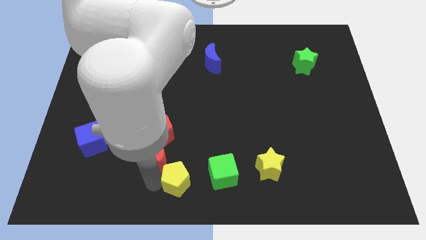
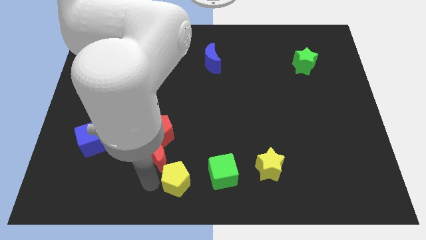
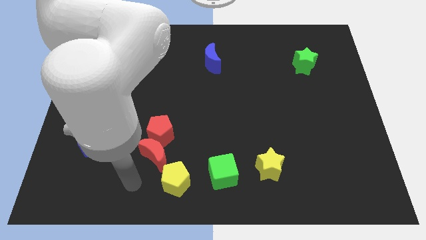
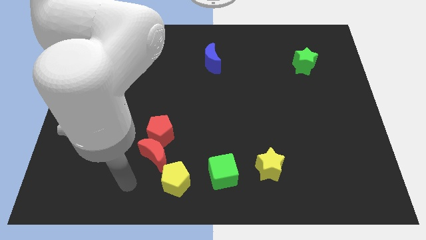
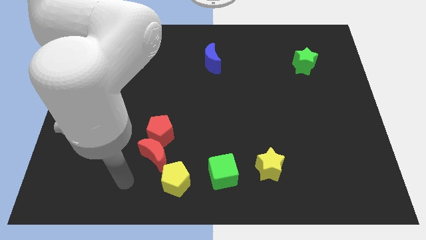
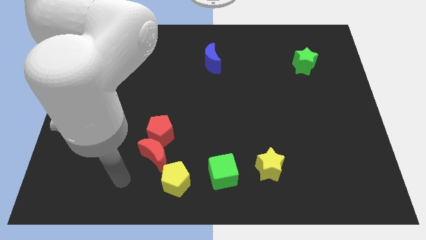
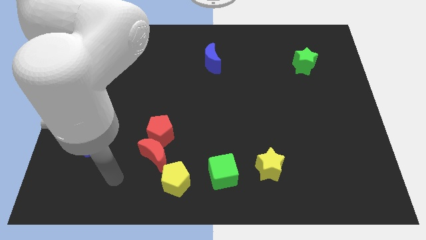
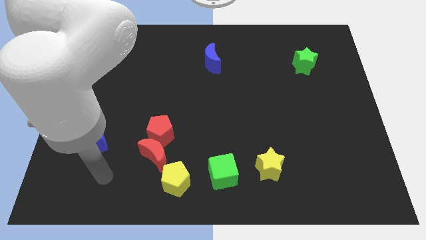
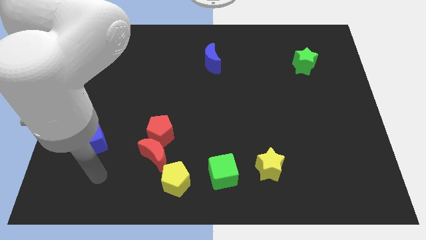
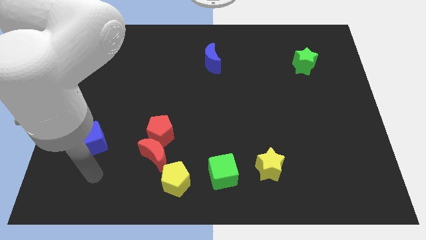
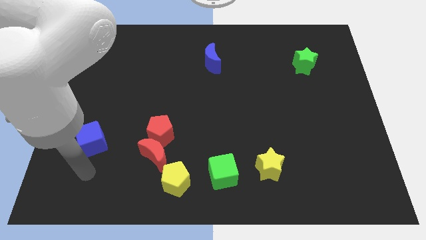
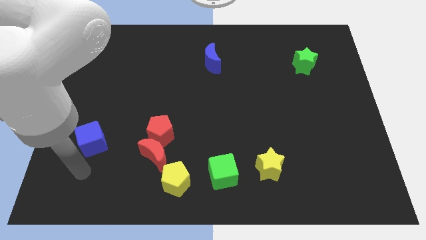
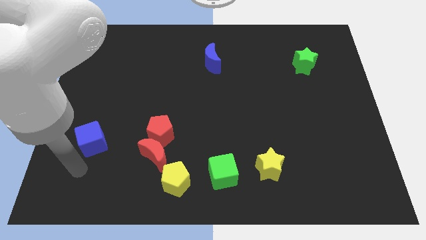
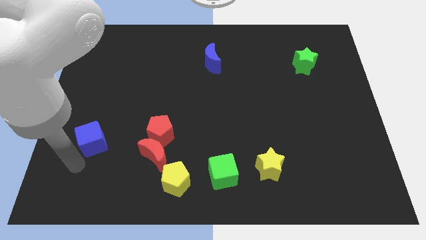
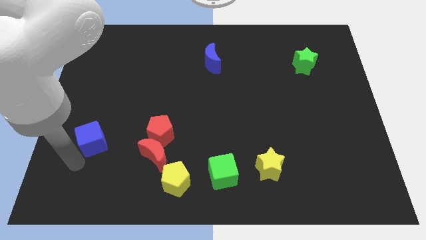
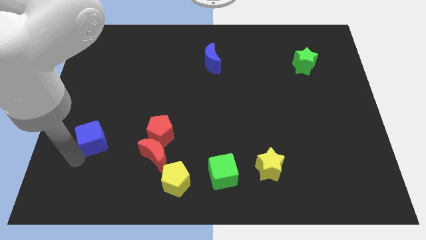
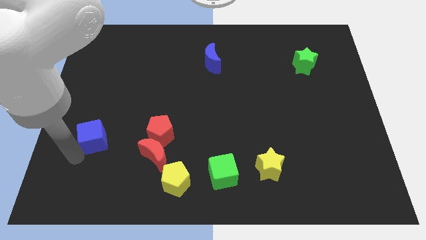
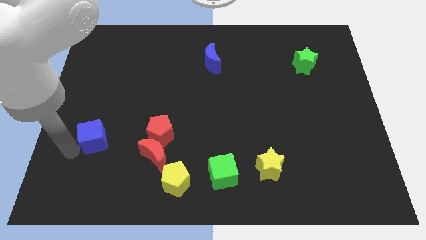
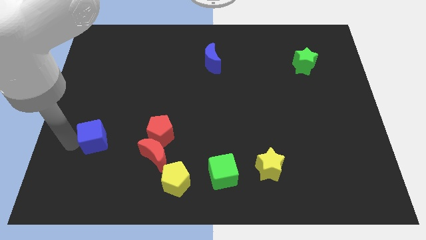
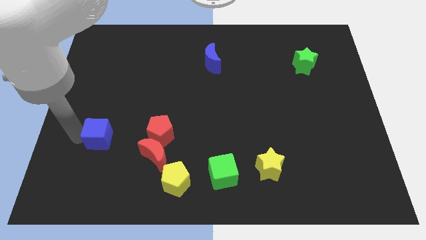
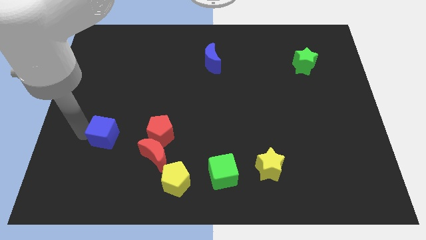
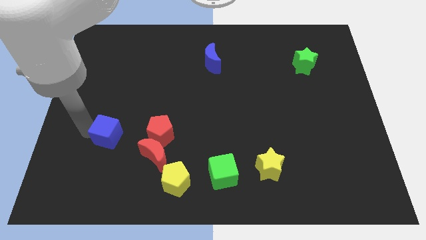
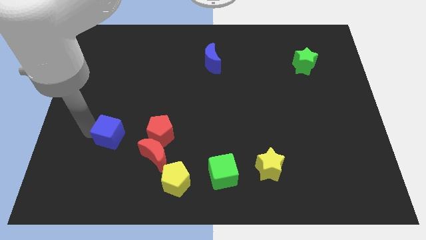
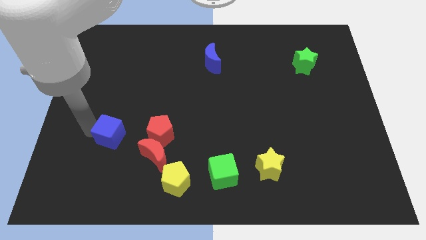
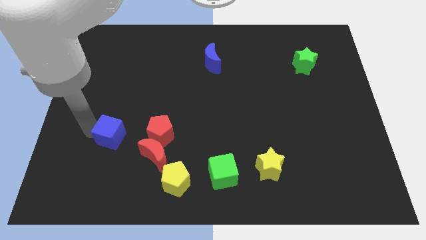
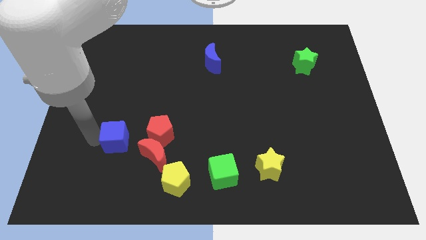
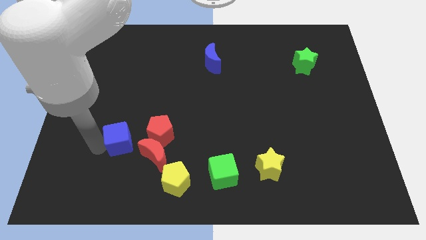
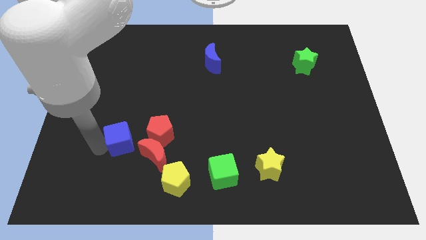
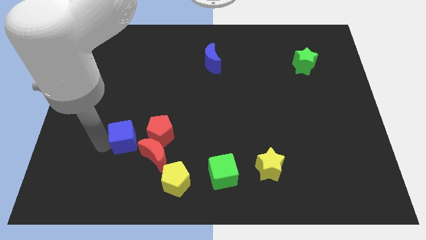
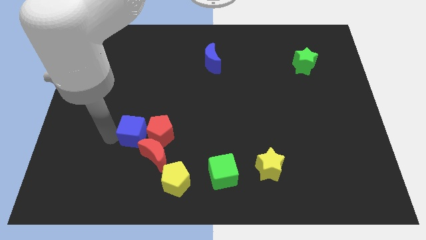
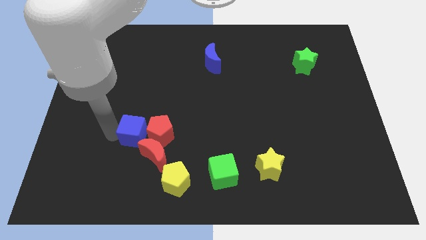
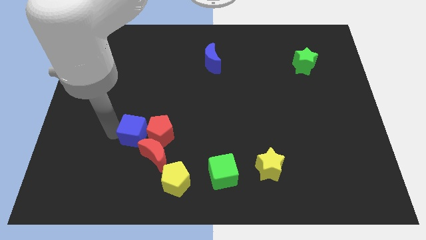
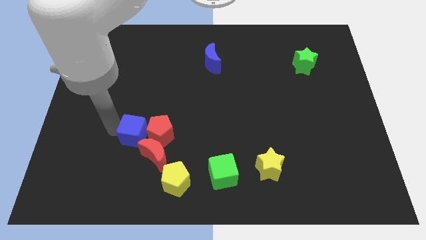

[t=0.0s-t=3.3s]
move the blue cube to the left of the red pentagon

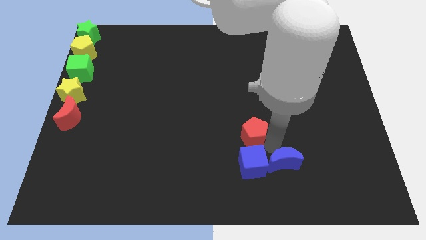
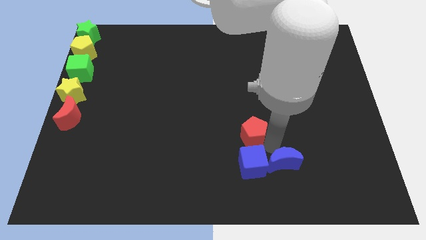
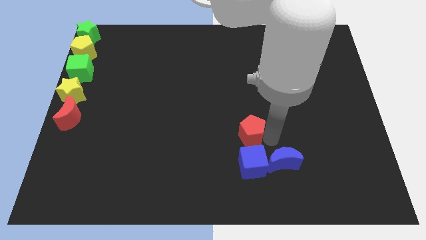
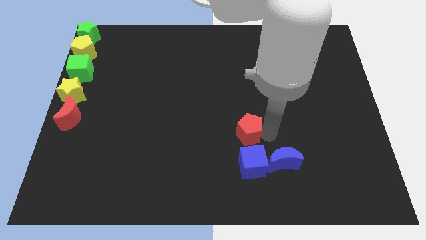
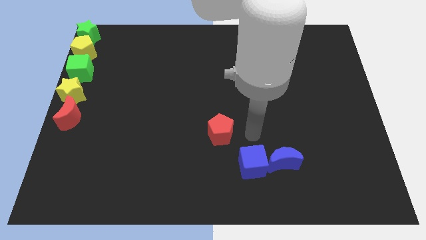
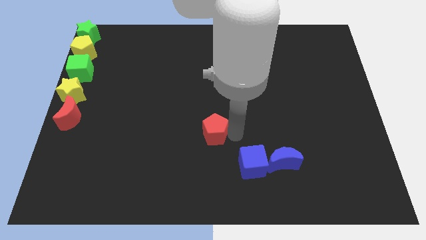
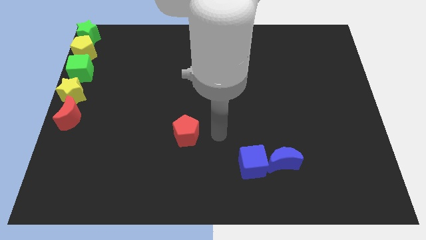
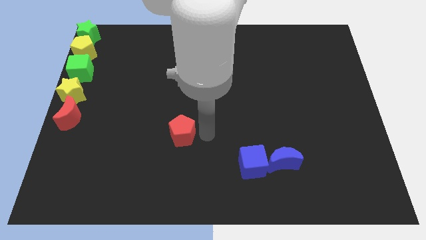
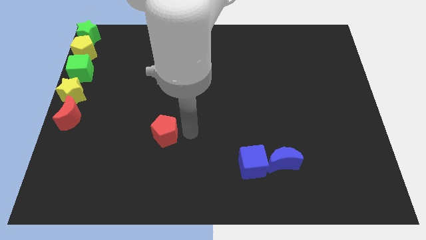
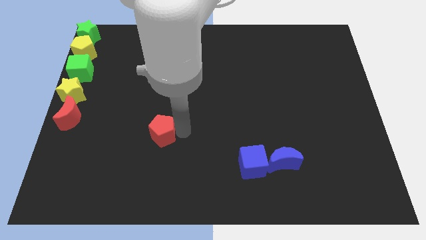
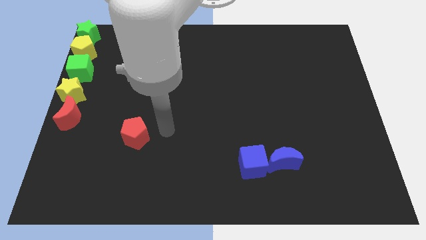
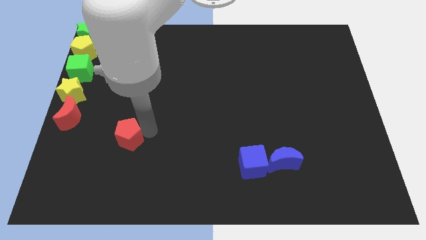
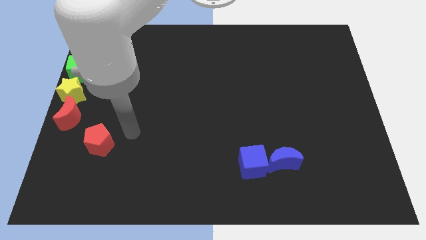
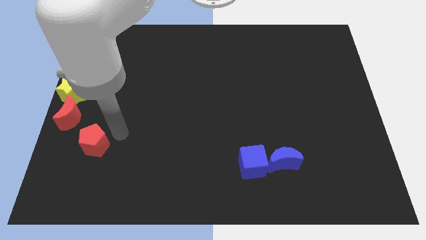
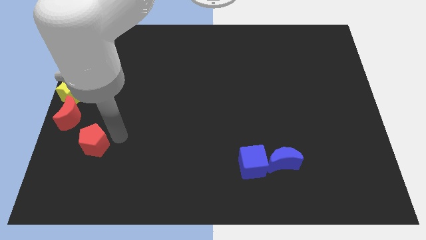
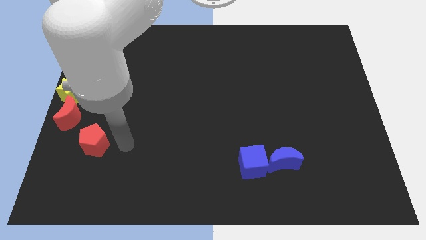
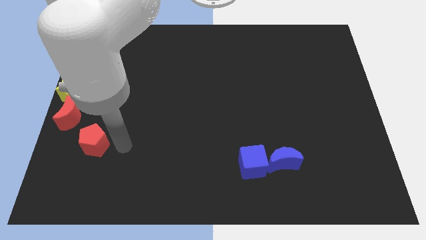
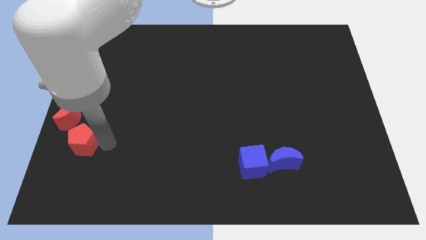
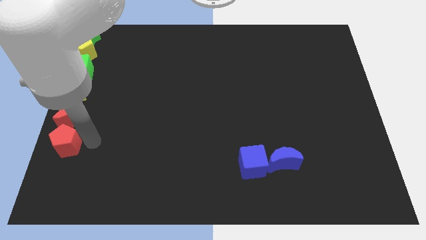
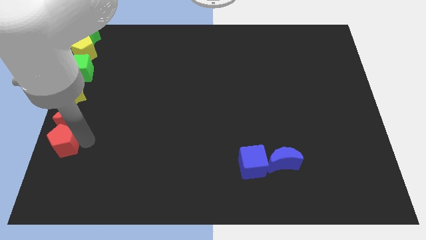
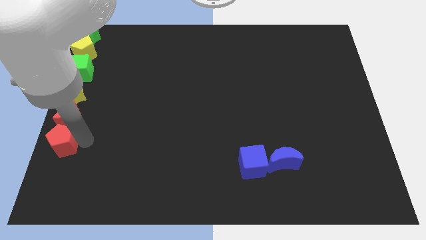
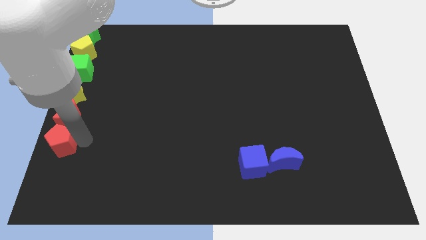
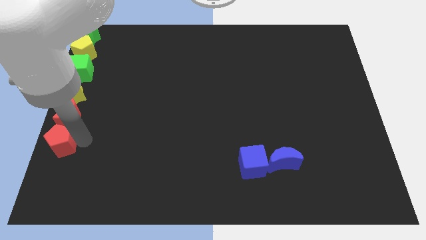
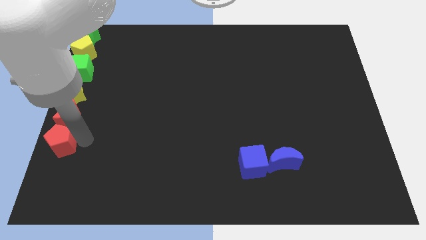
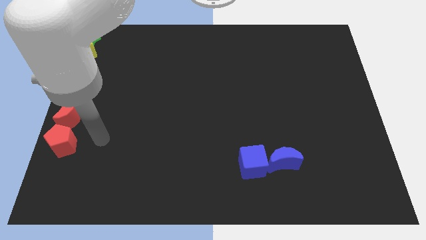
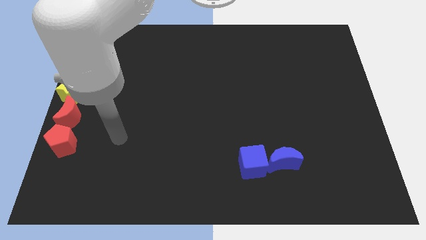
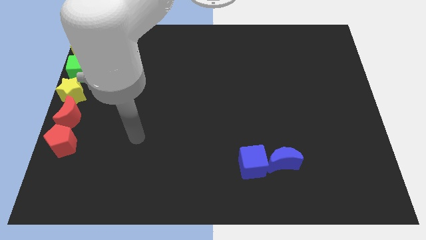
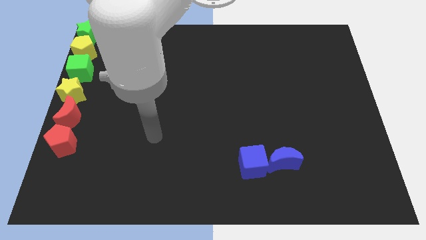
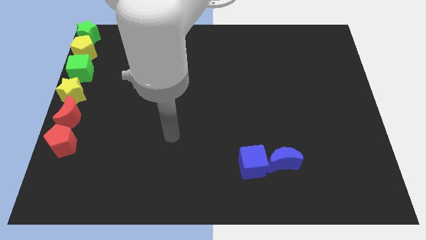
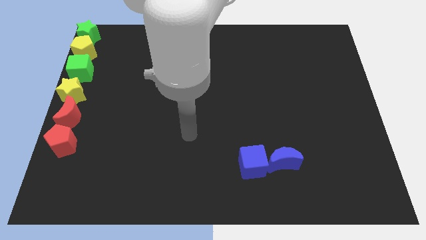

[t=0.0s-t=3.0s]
place red pentagon below the red crescent

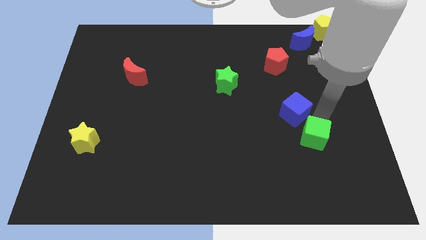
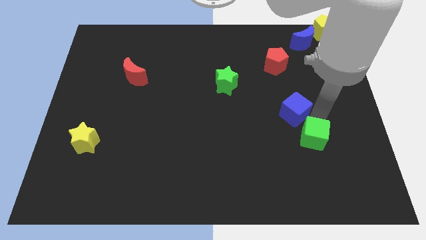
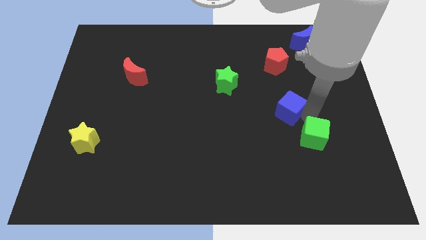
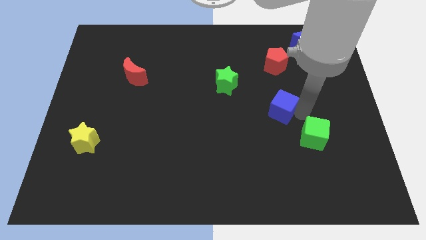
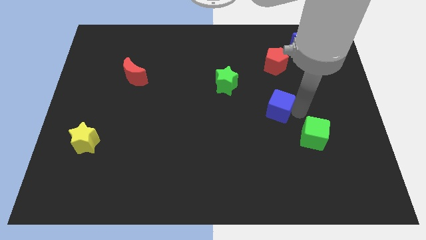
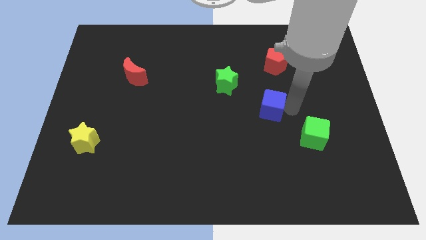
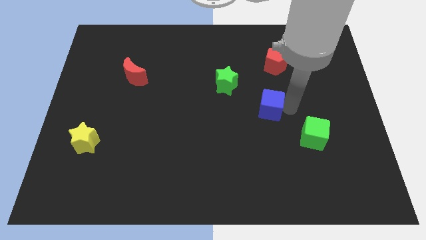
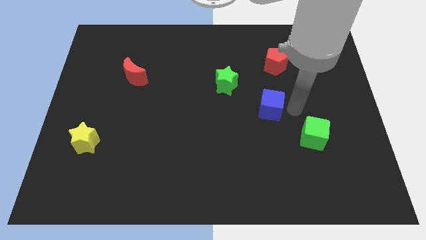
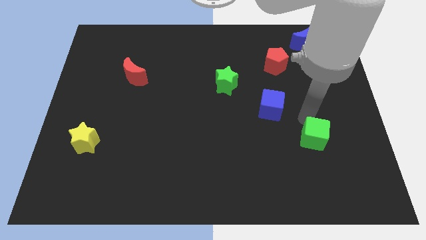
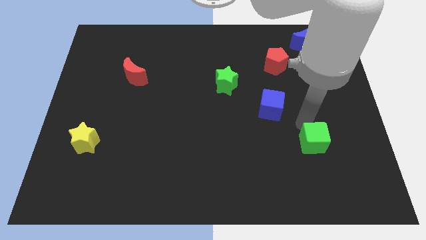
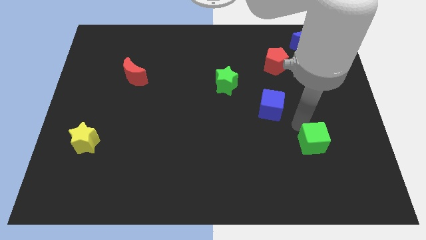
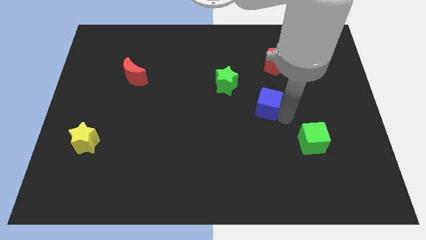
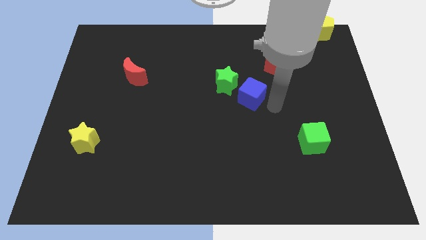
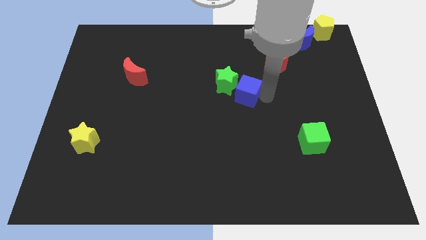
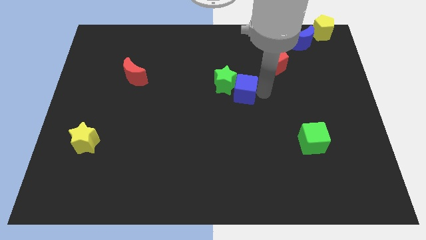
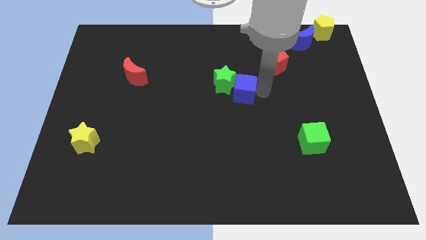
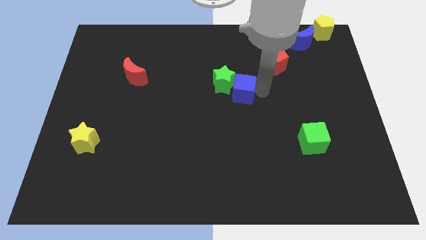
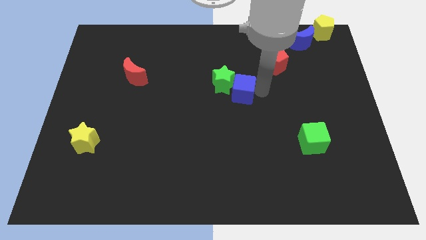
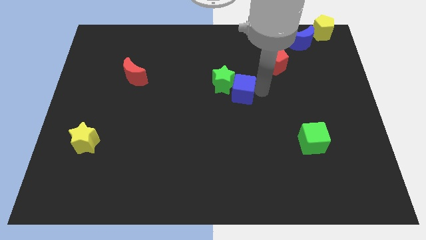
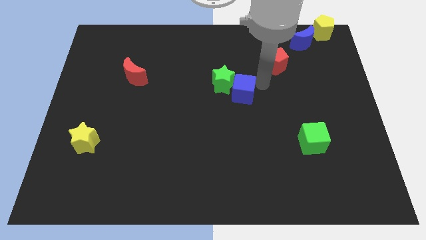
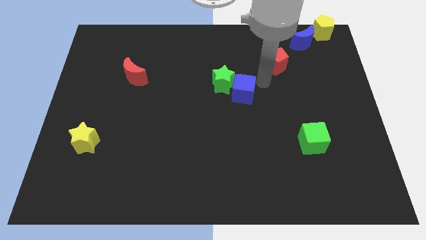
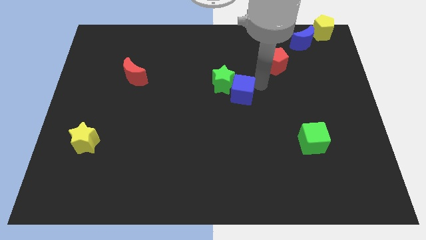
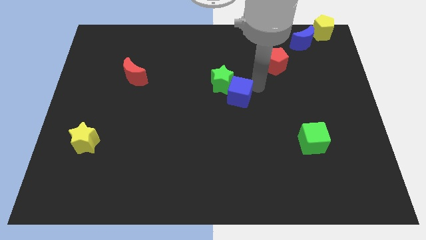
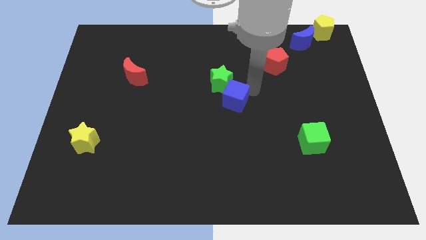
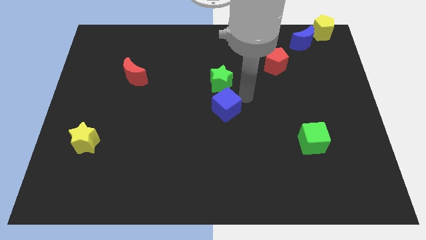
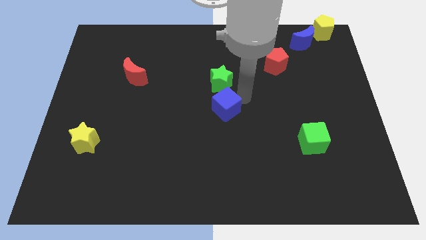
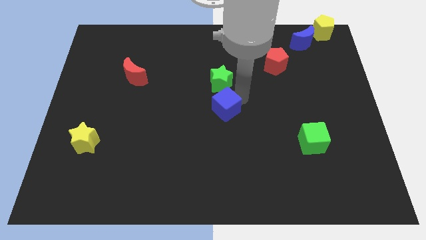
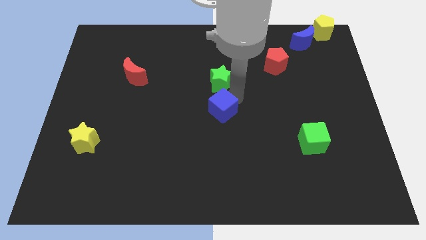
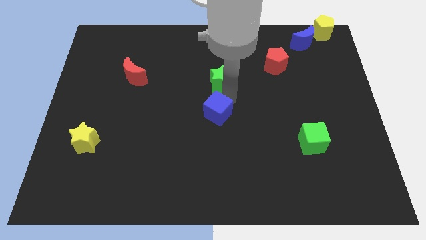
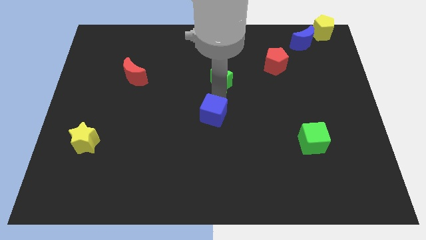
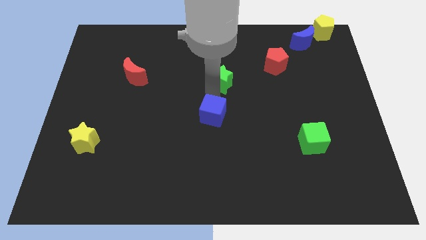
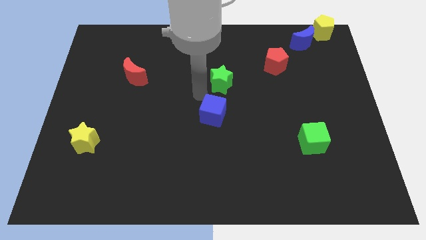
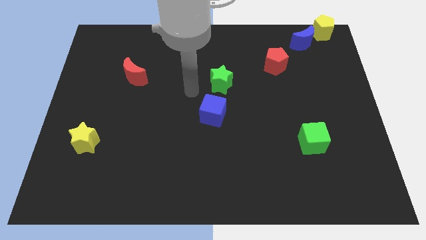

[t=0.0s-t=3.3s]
move the blue block to the center
